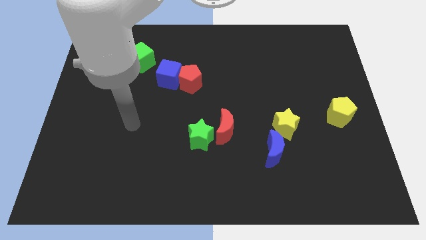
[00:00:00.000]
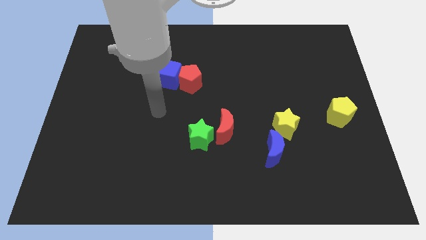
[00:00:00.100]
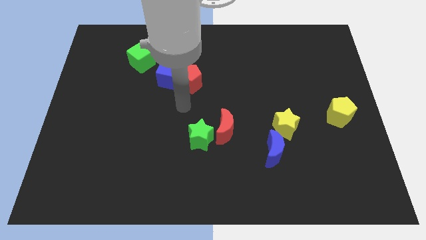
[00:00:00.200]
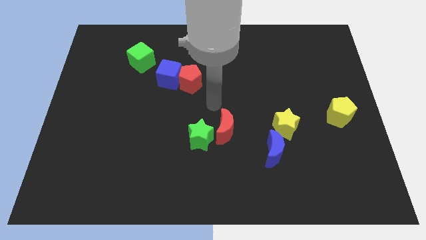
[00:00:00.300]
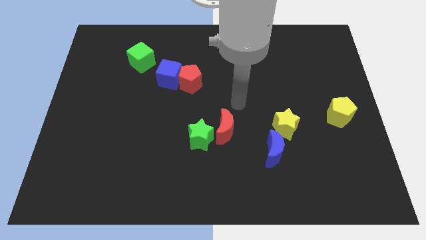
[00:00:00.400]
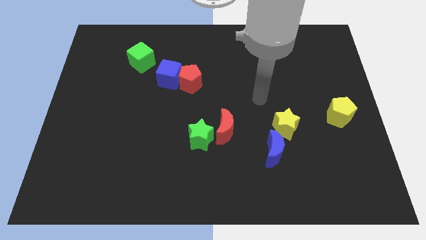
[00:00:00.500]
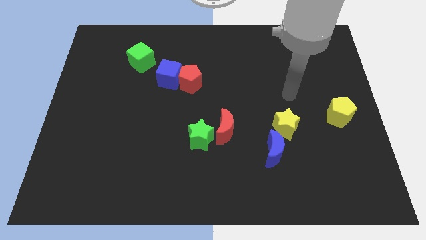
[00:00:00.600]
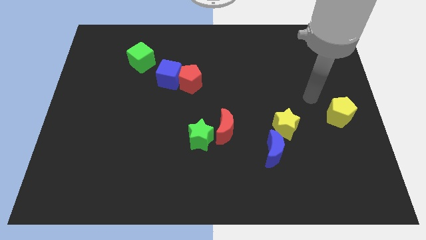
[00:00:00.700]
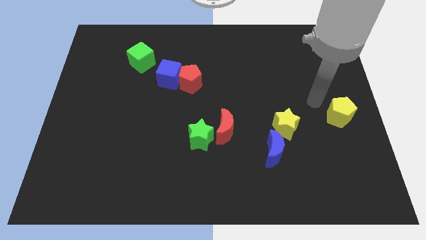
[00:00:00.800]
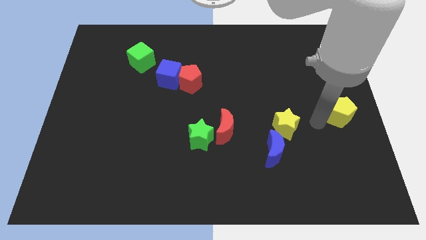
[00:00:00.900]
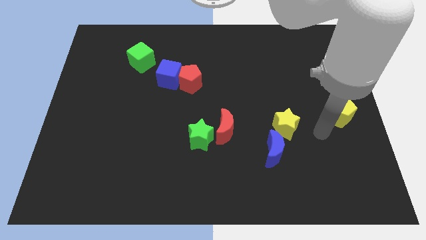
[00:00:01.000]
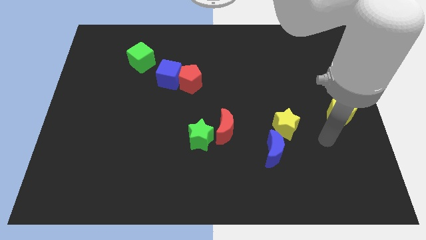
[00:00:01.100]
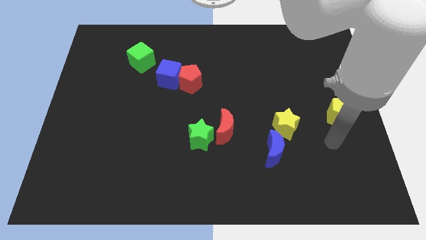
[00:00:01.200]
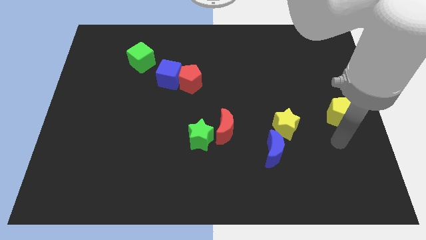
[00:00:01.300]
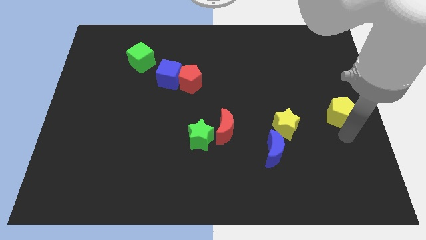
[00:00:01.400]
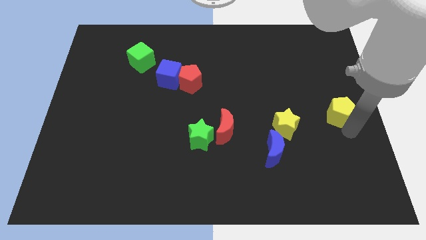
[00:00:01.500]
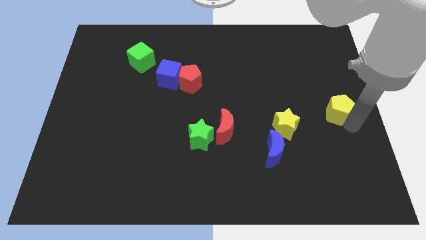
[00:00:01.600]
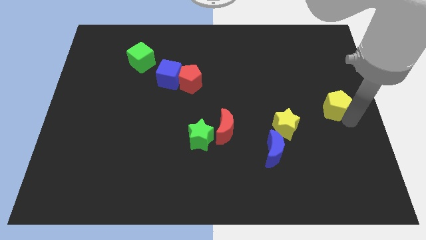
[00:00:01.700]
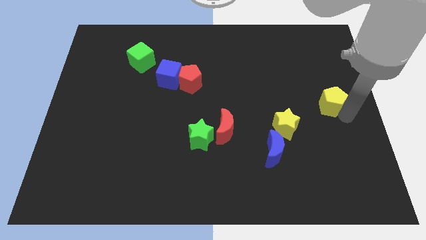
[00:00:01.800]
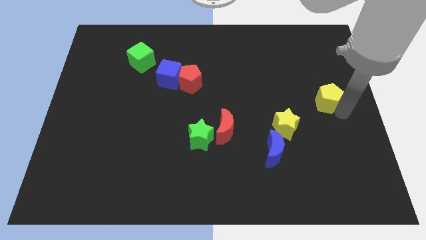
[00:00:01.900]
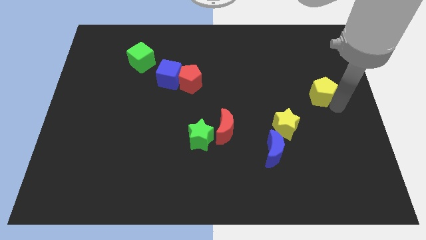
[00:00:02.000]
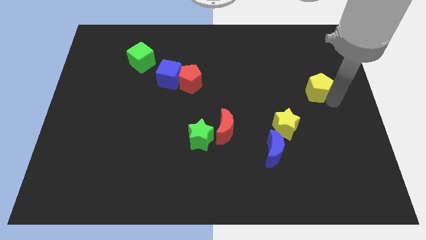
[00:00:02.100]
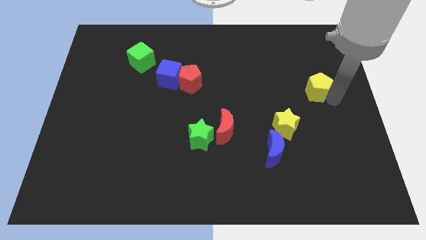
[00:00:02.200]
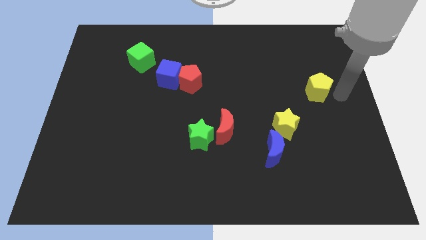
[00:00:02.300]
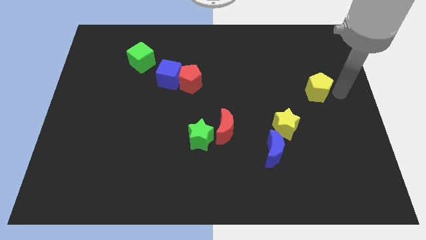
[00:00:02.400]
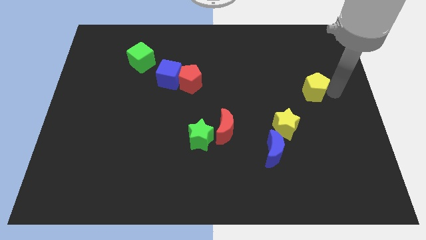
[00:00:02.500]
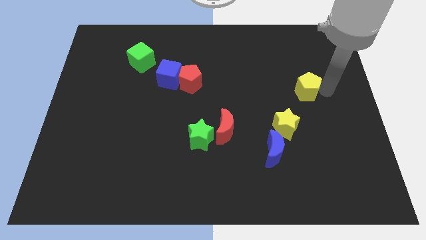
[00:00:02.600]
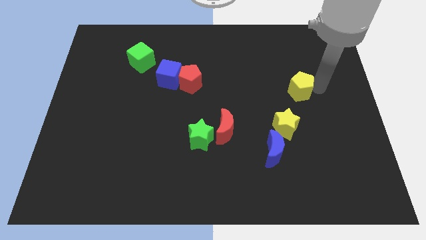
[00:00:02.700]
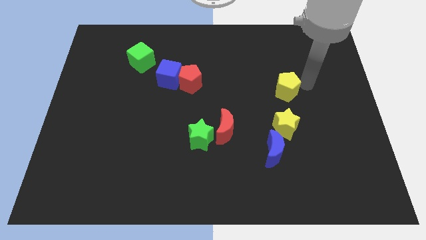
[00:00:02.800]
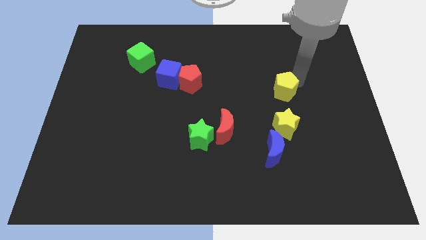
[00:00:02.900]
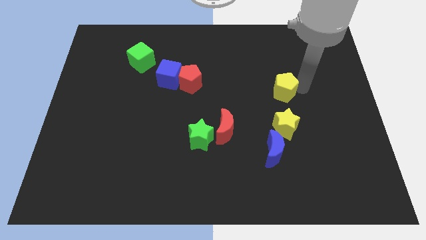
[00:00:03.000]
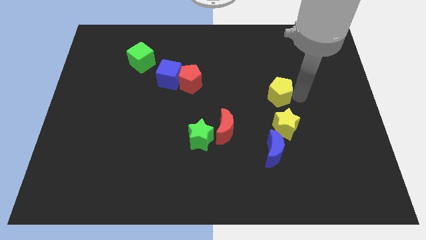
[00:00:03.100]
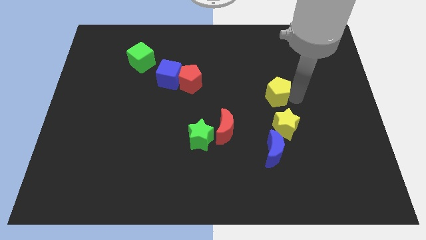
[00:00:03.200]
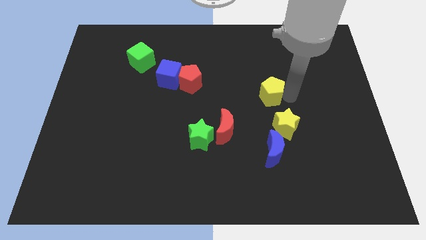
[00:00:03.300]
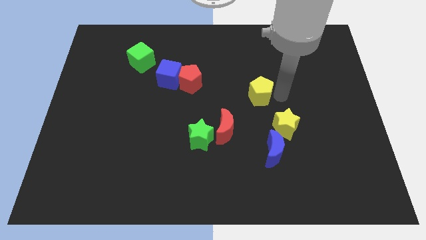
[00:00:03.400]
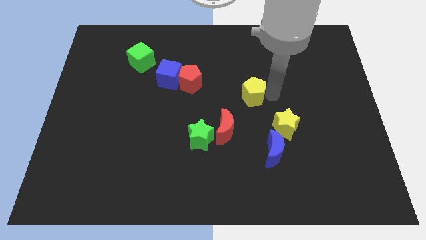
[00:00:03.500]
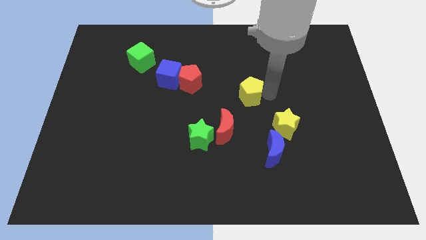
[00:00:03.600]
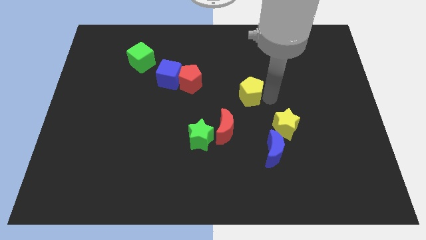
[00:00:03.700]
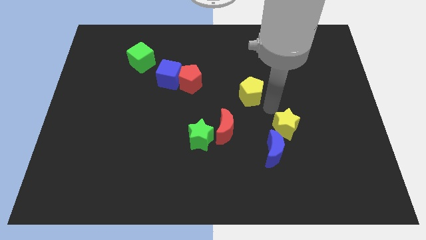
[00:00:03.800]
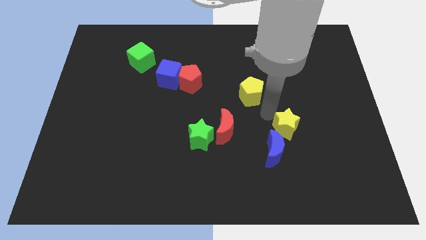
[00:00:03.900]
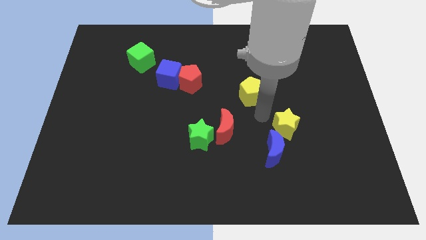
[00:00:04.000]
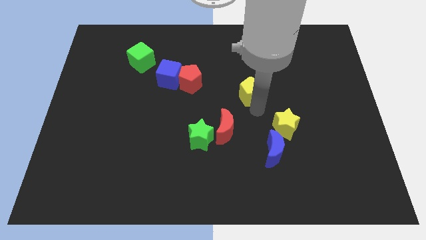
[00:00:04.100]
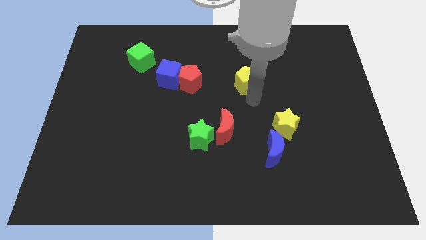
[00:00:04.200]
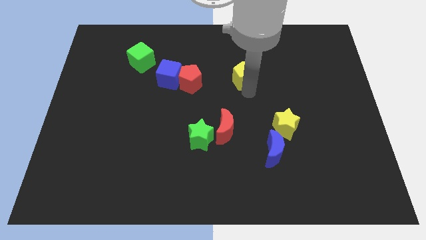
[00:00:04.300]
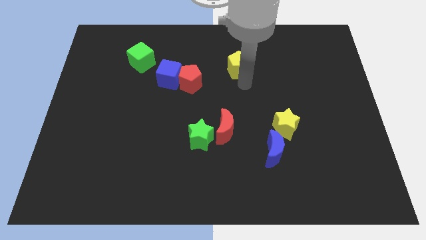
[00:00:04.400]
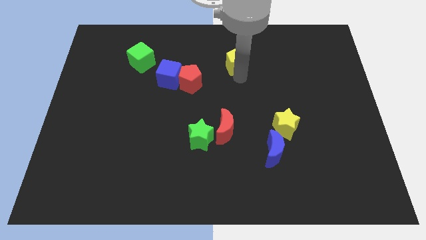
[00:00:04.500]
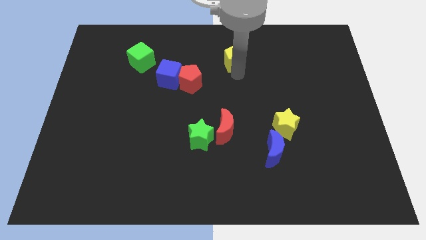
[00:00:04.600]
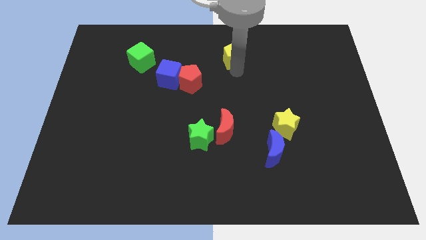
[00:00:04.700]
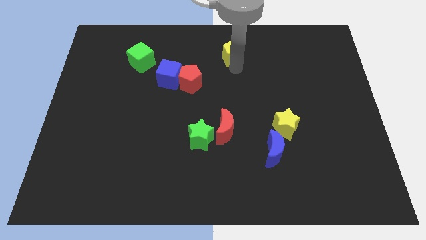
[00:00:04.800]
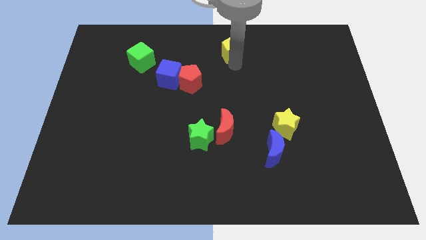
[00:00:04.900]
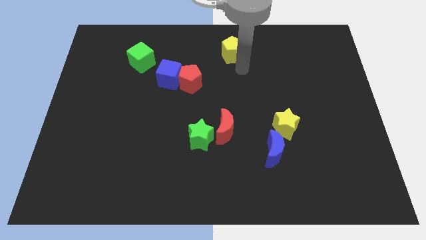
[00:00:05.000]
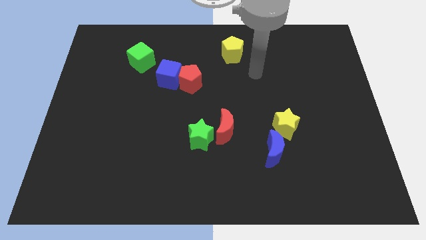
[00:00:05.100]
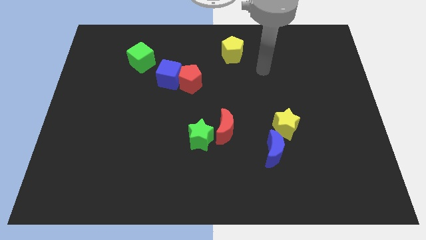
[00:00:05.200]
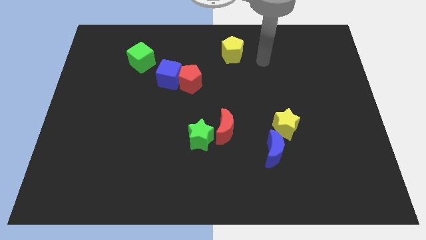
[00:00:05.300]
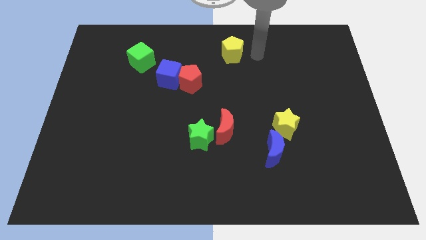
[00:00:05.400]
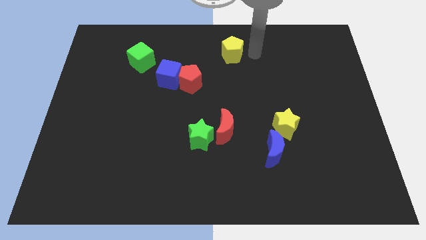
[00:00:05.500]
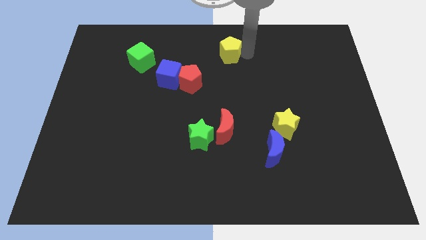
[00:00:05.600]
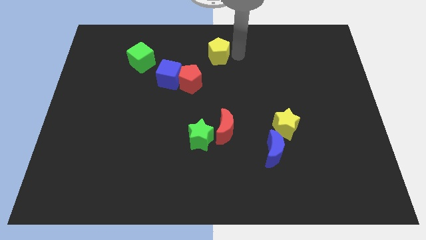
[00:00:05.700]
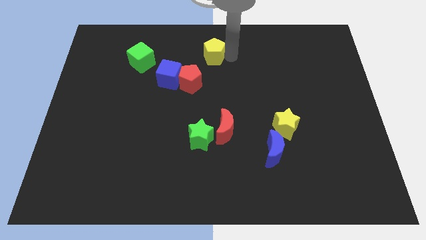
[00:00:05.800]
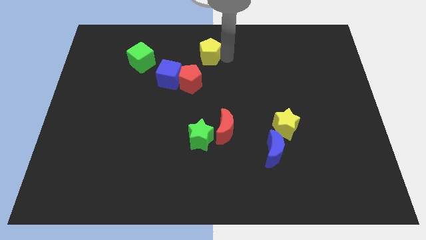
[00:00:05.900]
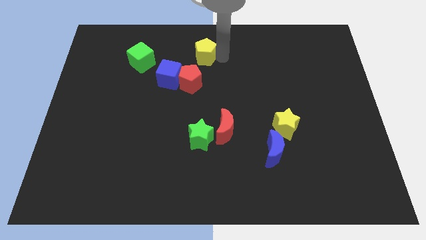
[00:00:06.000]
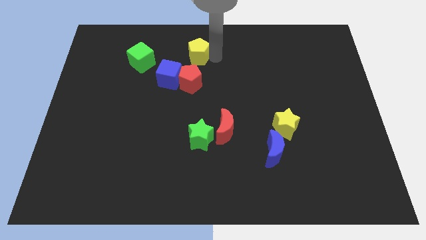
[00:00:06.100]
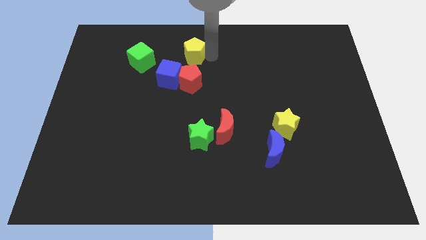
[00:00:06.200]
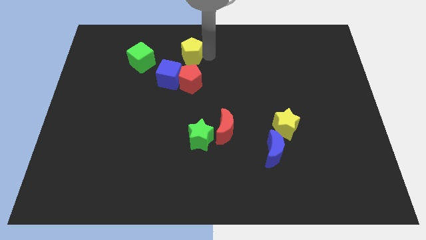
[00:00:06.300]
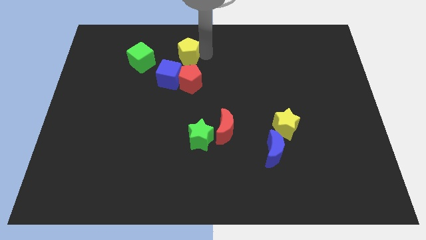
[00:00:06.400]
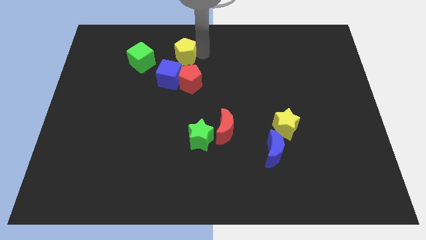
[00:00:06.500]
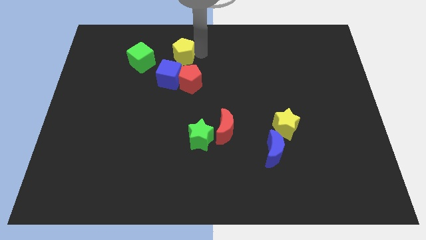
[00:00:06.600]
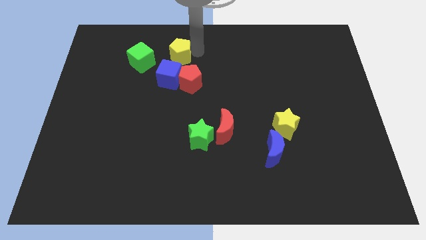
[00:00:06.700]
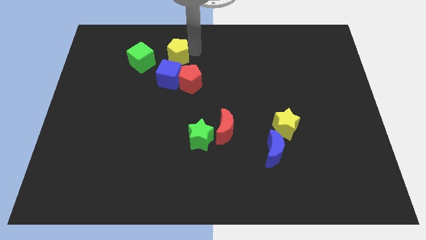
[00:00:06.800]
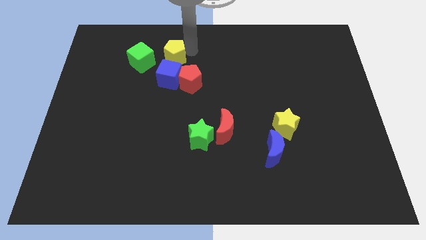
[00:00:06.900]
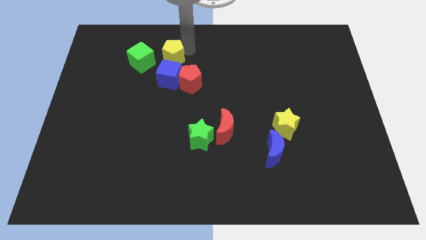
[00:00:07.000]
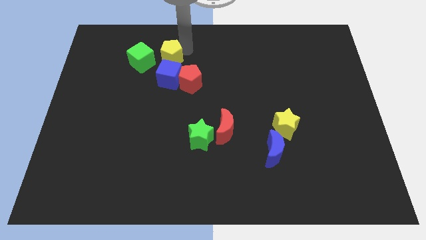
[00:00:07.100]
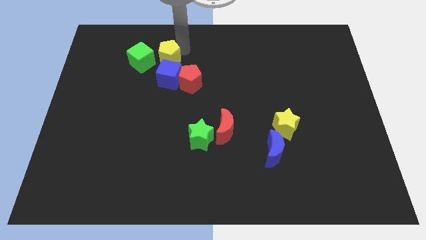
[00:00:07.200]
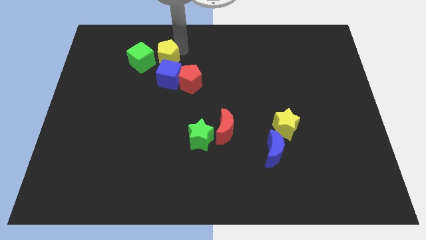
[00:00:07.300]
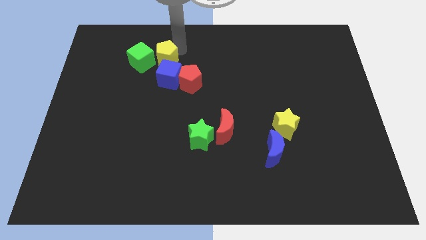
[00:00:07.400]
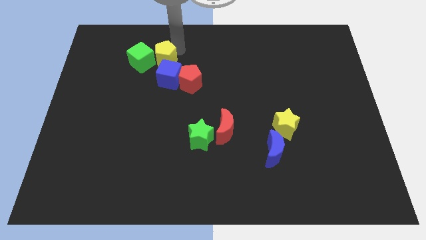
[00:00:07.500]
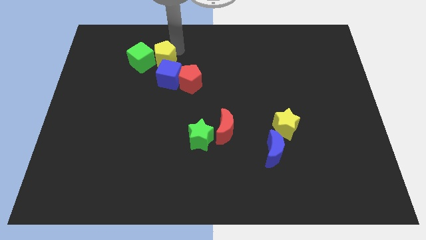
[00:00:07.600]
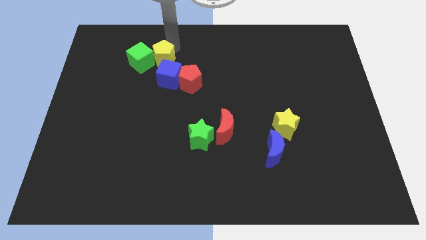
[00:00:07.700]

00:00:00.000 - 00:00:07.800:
put the yellow pentagon close to the green cube
